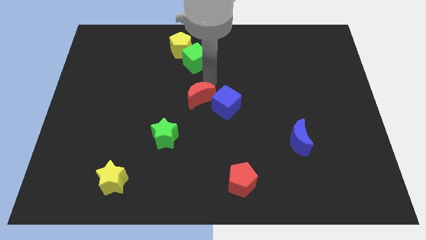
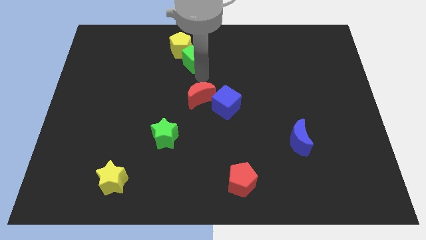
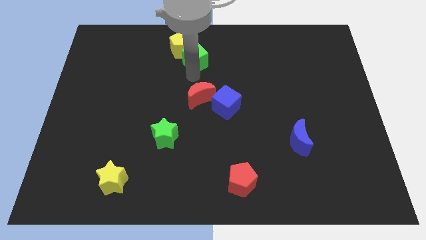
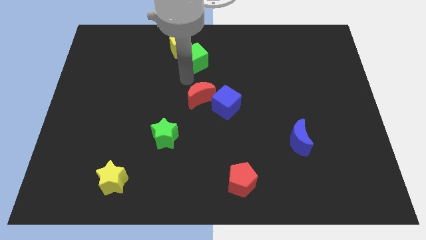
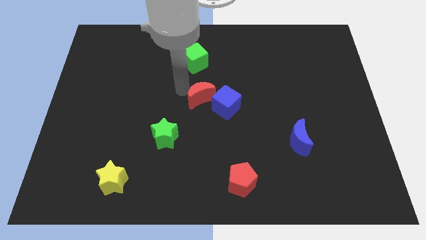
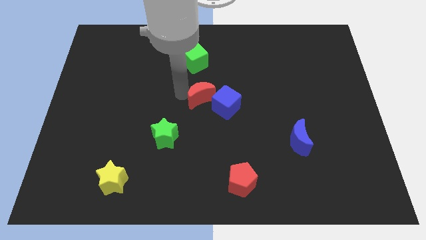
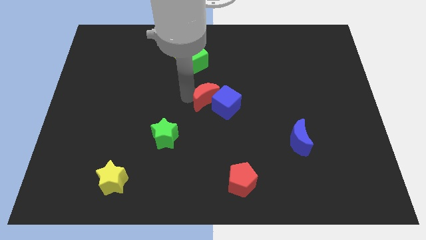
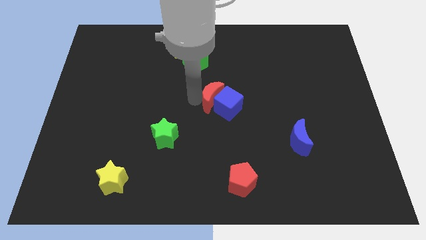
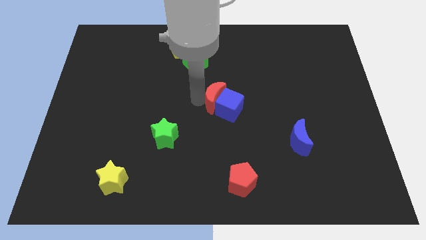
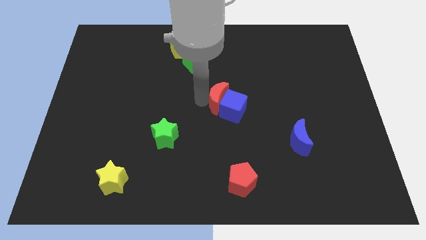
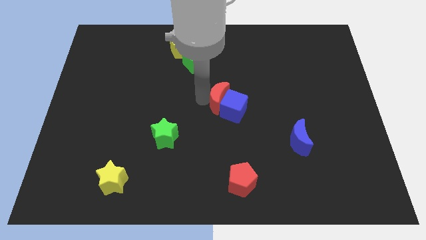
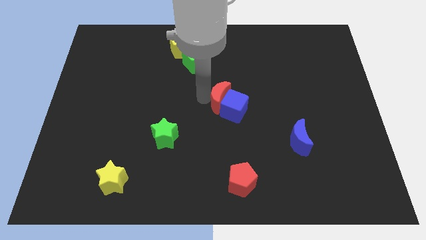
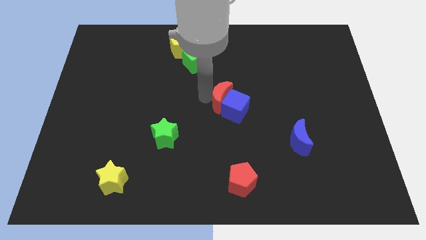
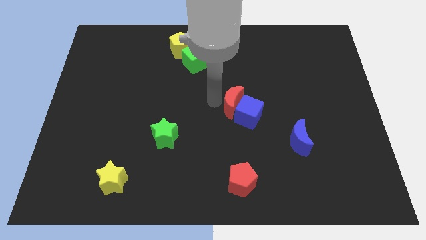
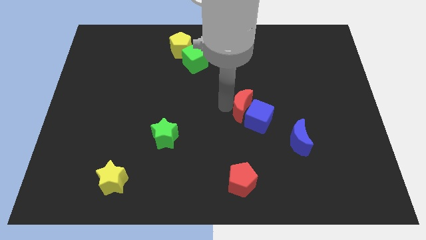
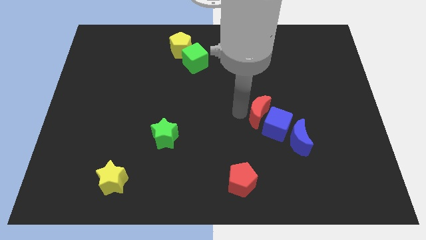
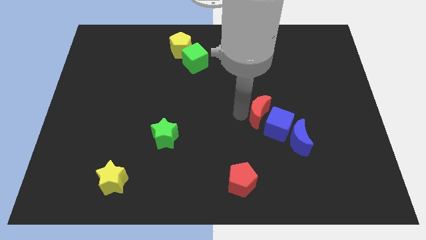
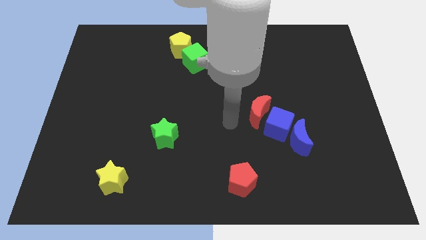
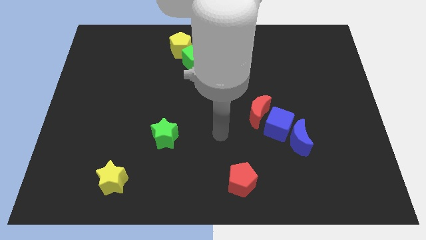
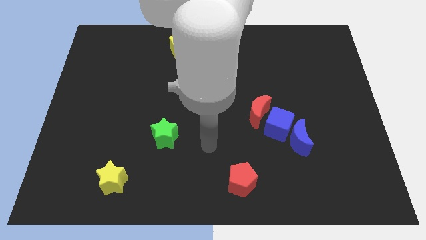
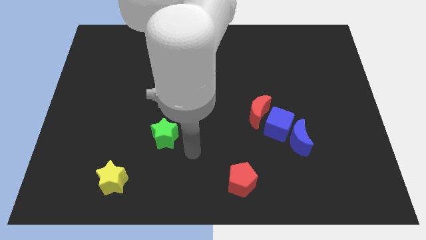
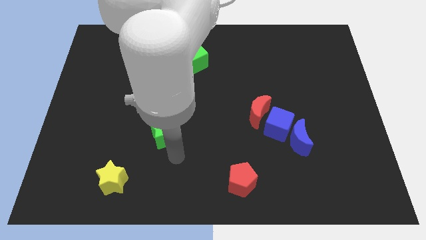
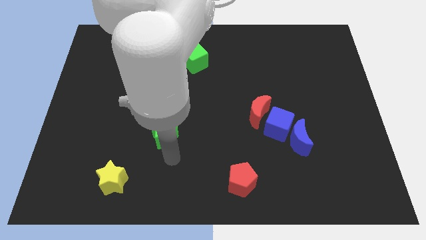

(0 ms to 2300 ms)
move red moon and blue cube towards blue crescent

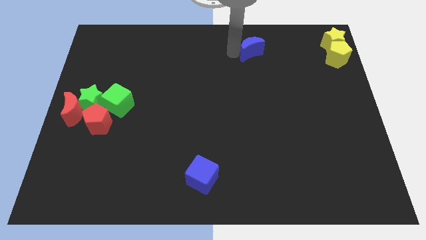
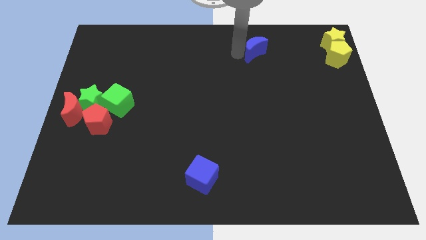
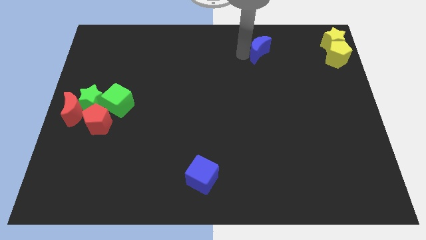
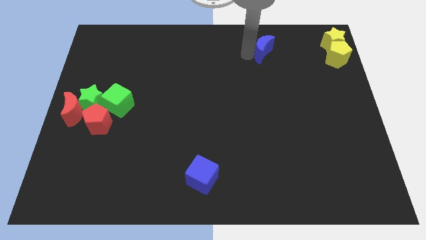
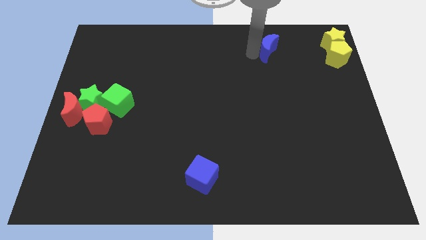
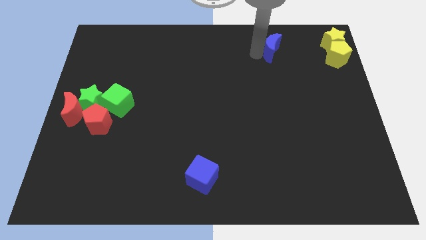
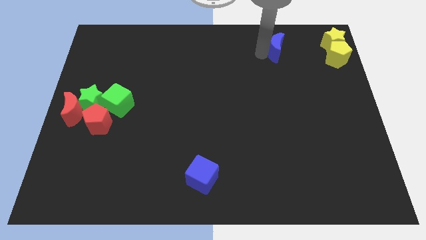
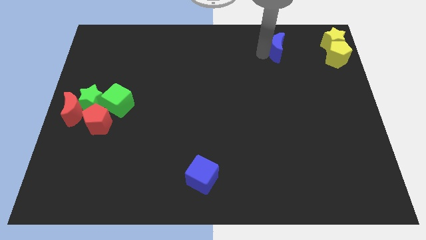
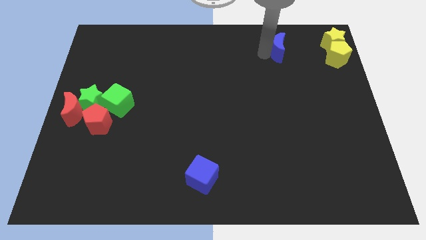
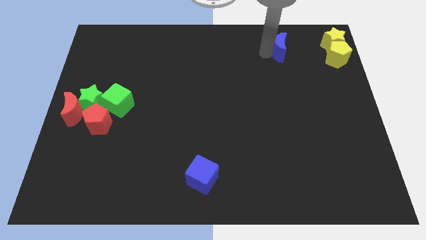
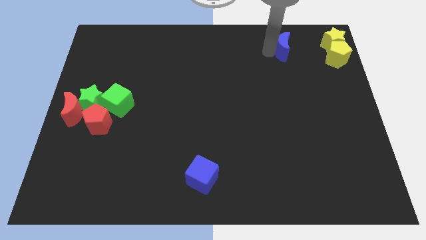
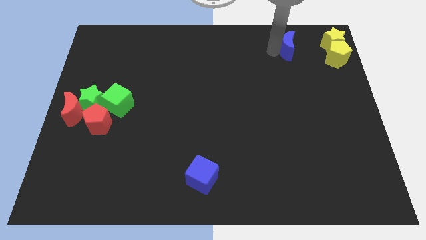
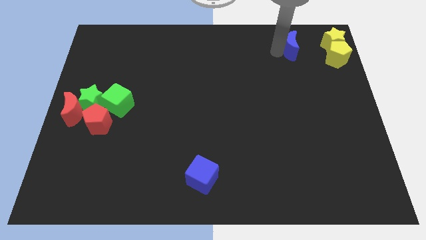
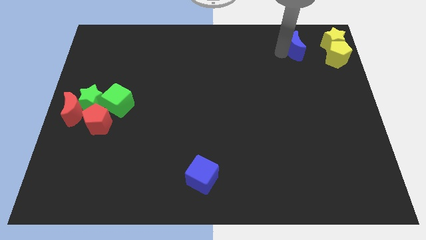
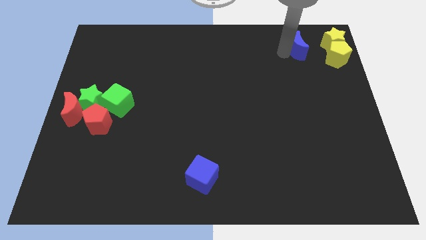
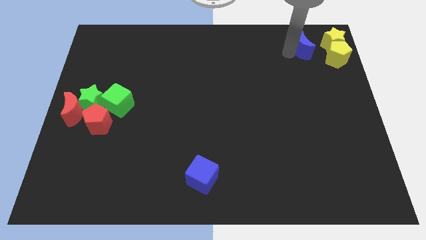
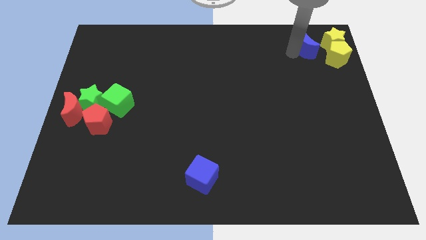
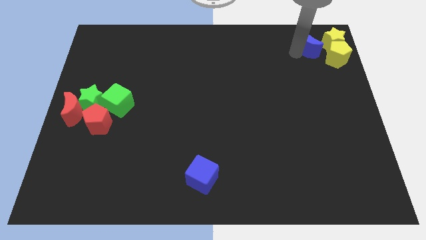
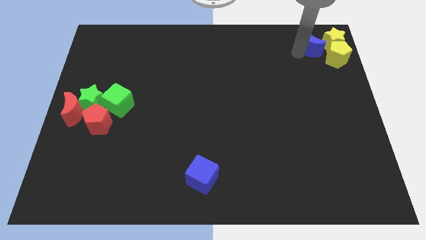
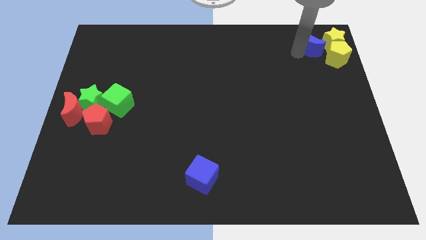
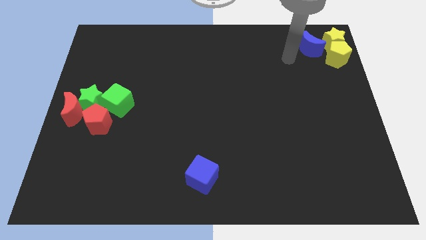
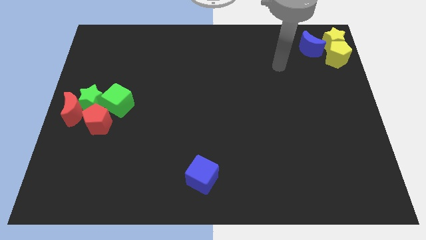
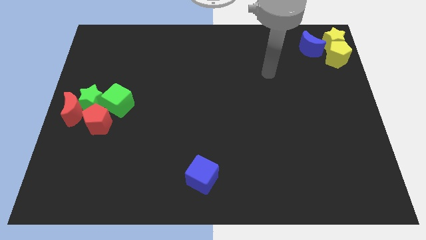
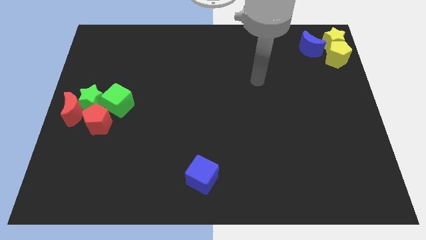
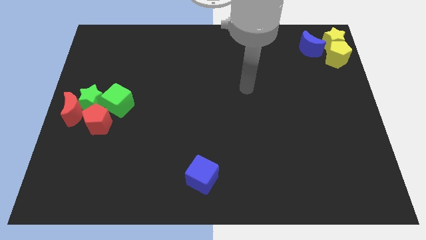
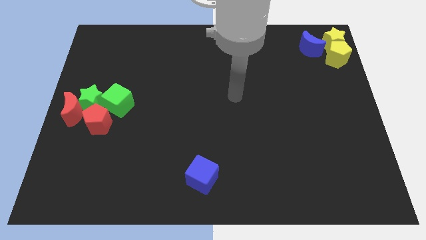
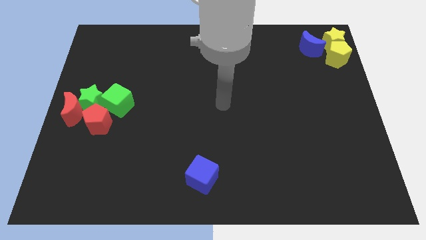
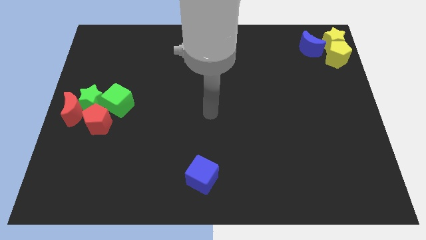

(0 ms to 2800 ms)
move the blue crescent close to the group of yellow blocks

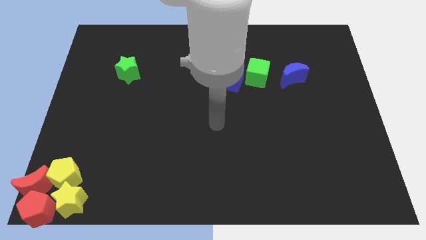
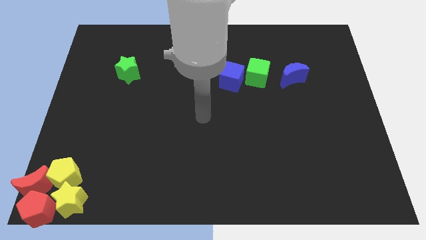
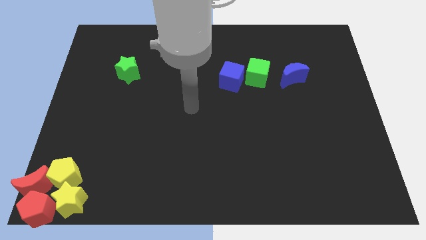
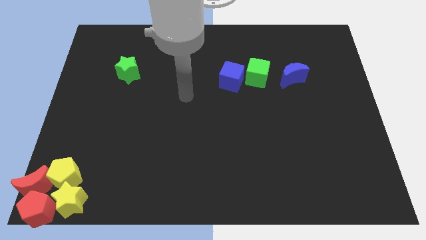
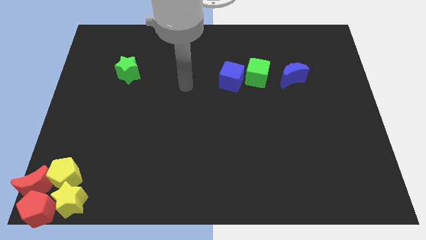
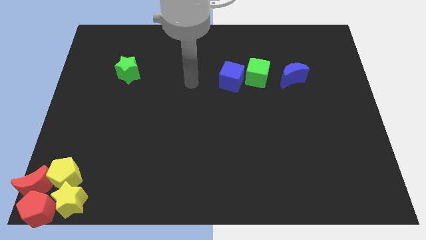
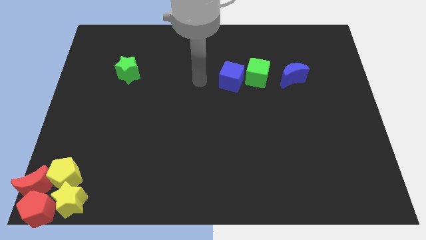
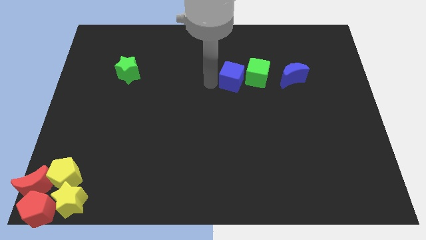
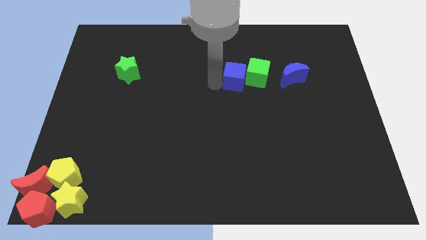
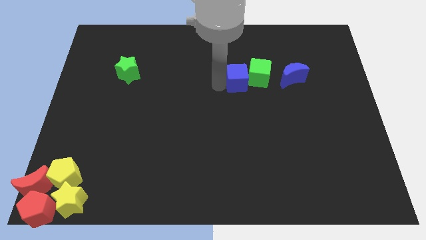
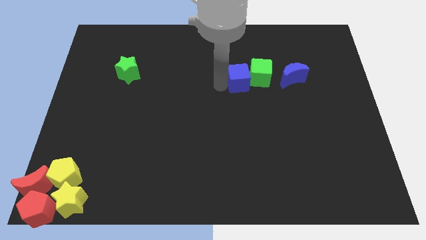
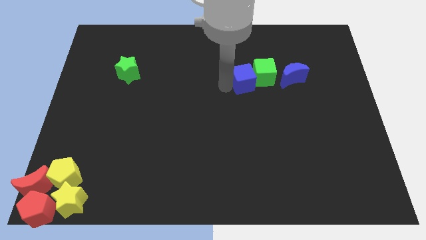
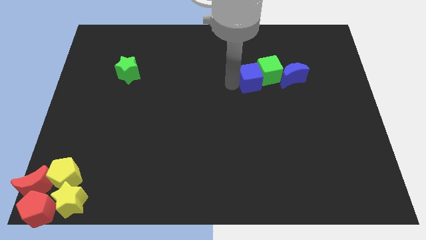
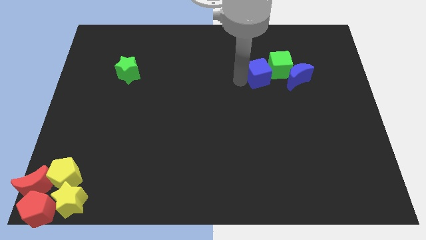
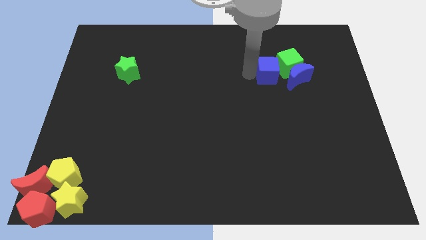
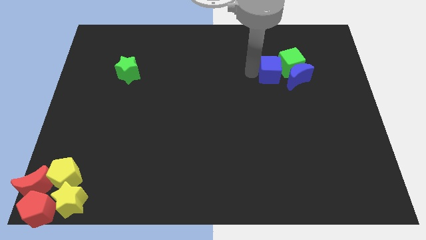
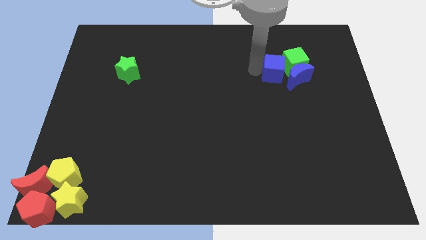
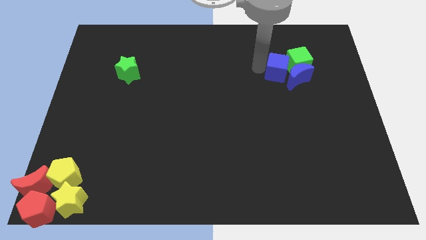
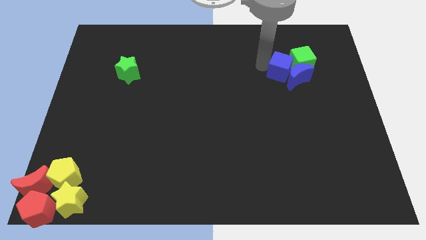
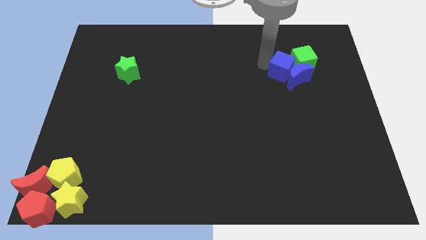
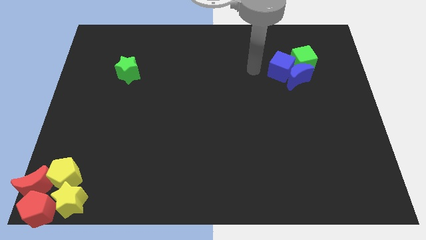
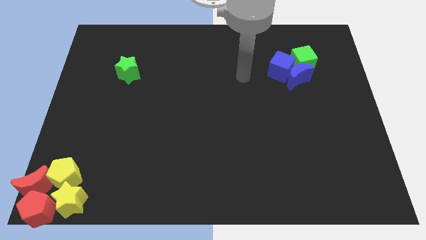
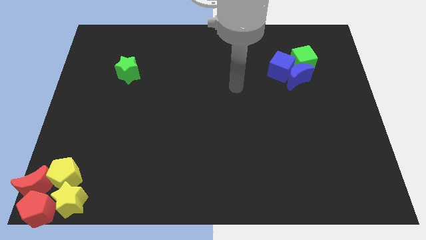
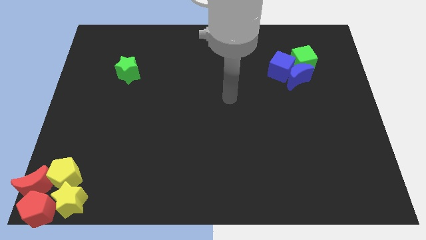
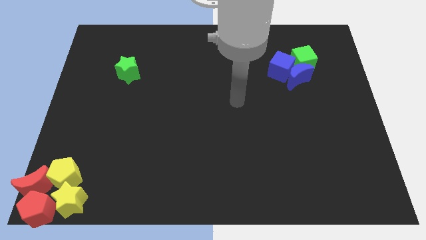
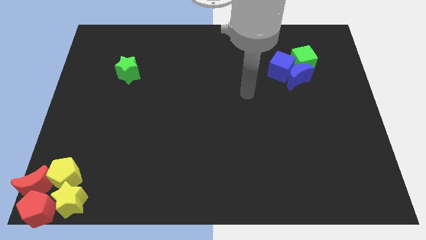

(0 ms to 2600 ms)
push blue cube to the top right of the board along with the green cube

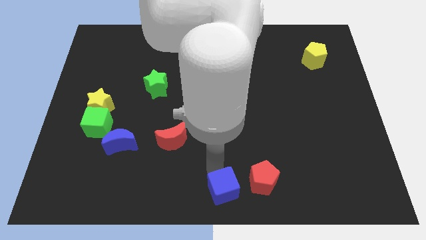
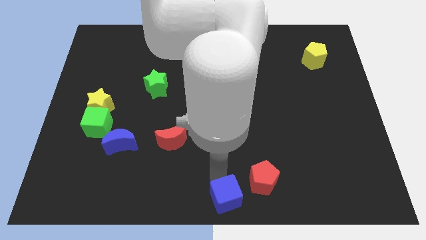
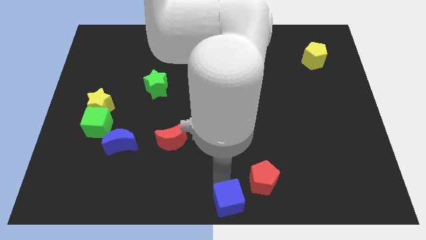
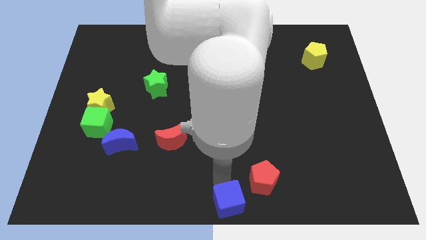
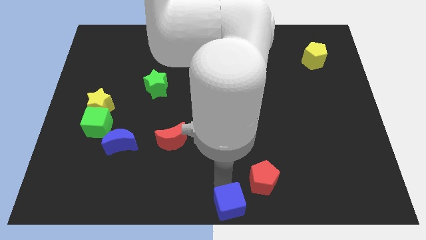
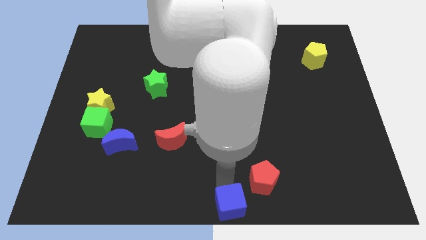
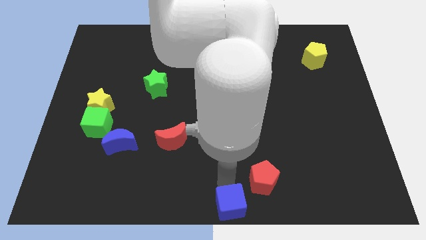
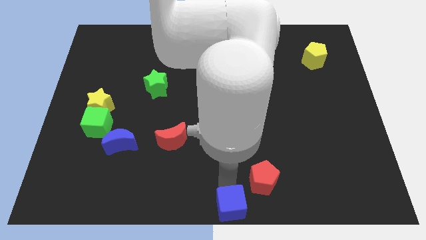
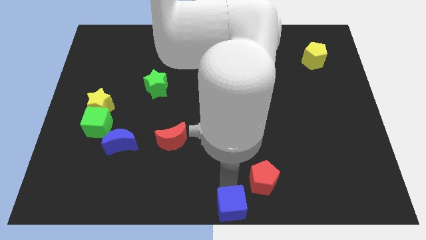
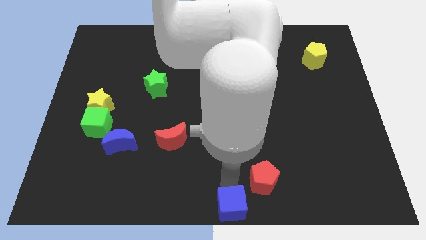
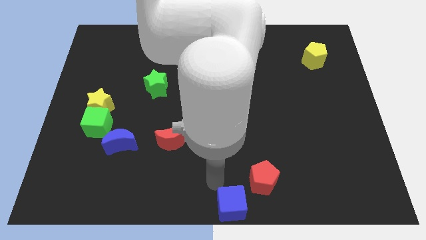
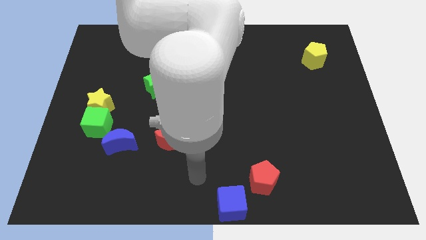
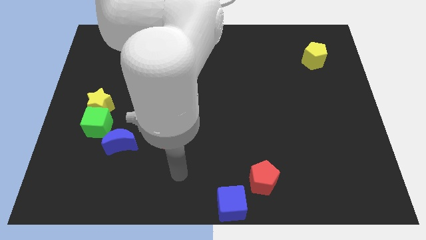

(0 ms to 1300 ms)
move the blue cube to the bottom center of the board
